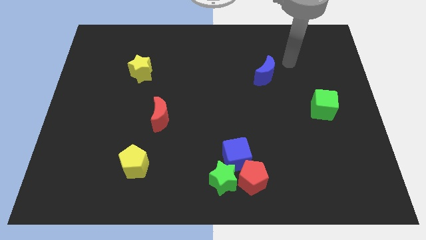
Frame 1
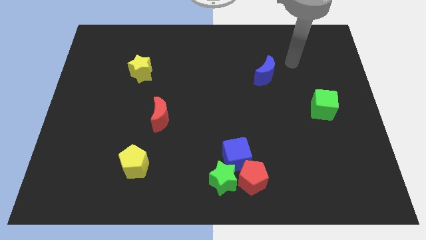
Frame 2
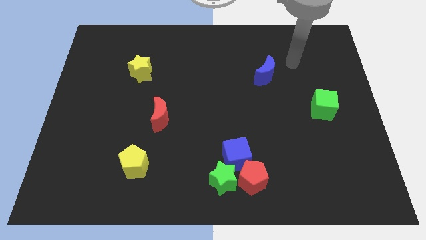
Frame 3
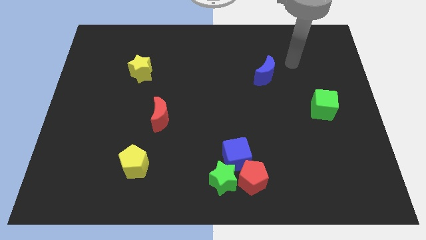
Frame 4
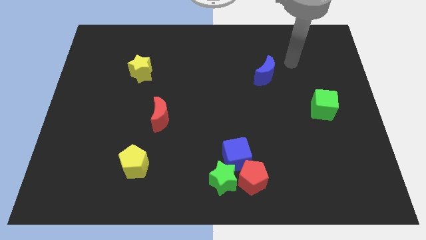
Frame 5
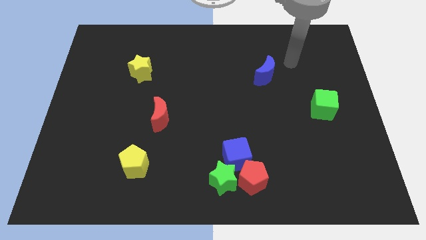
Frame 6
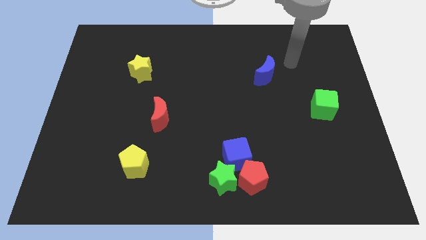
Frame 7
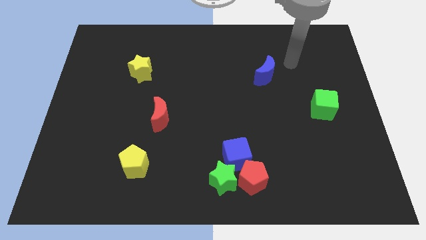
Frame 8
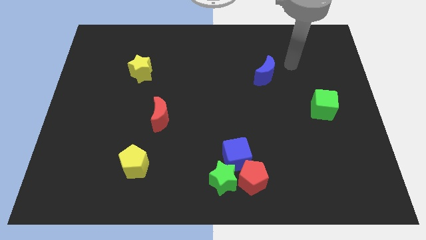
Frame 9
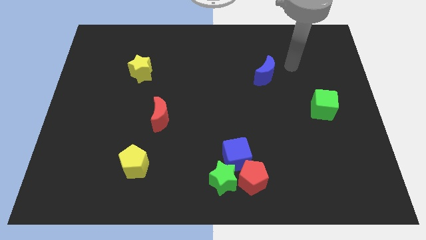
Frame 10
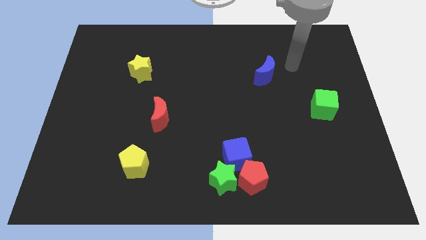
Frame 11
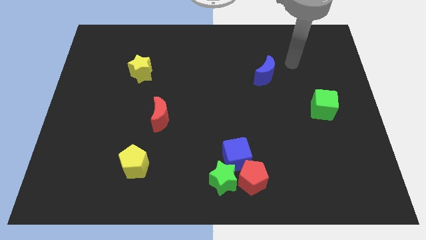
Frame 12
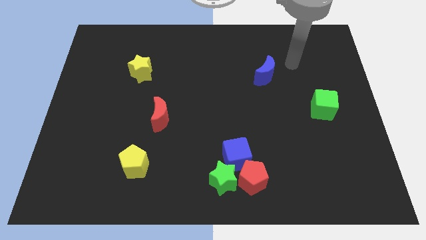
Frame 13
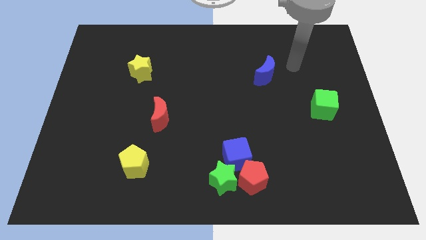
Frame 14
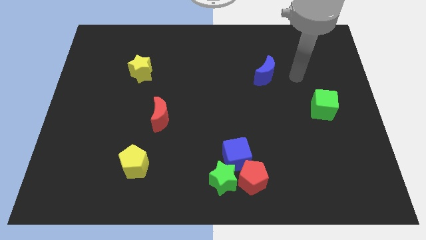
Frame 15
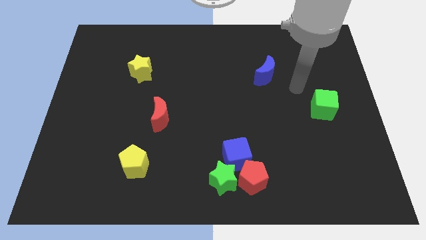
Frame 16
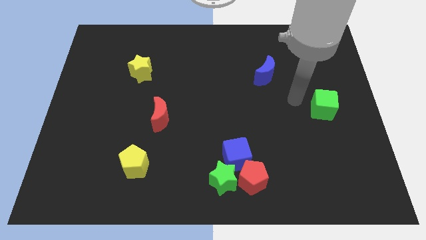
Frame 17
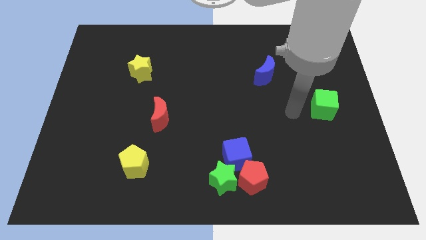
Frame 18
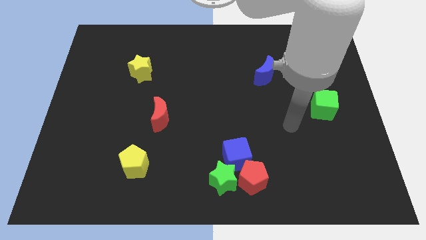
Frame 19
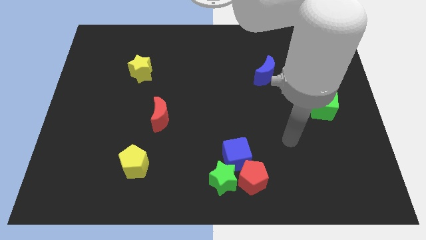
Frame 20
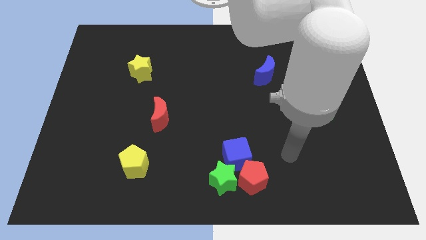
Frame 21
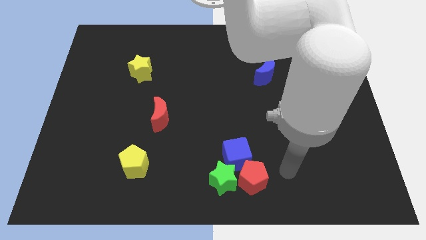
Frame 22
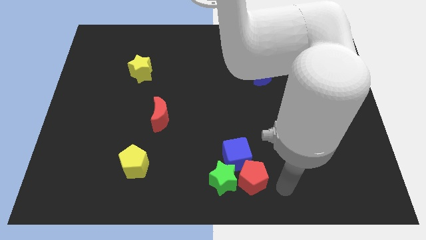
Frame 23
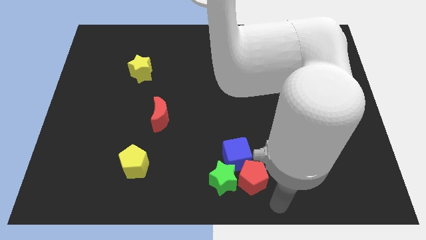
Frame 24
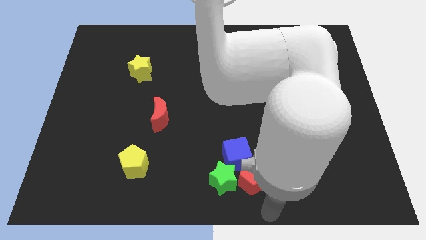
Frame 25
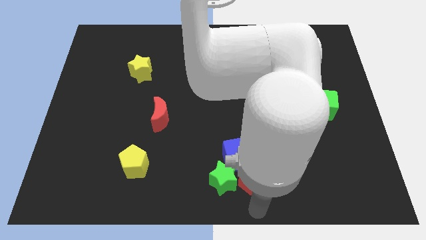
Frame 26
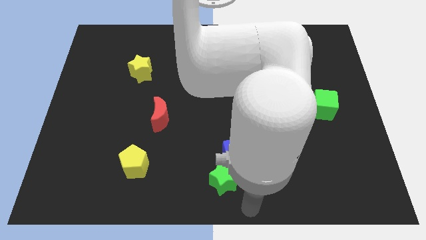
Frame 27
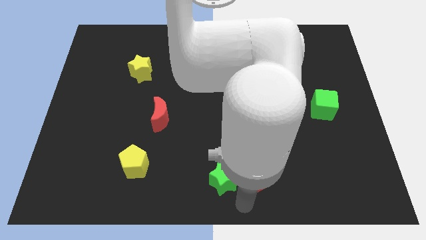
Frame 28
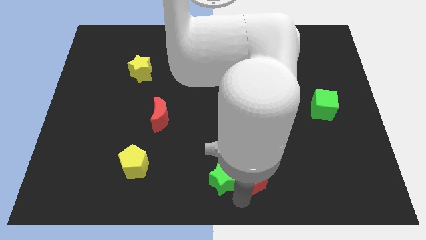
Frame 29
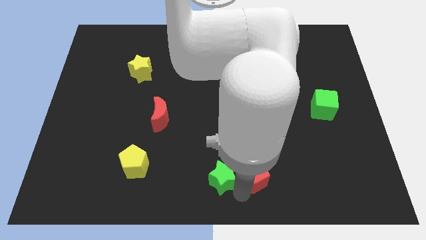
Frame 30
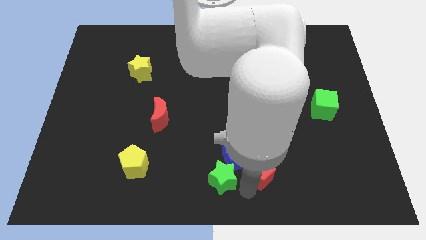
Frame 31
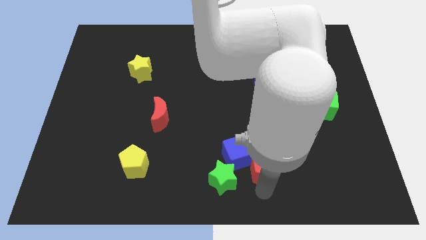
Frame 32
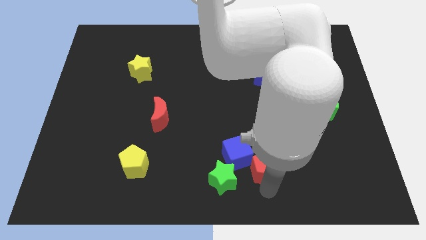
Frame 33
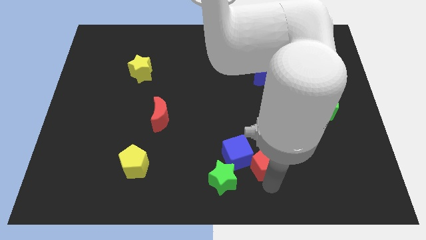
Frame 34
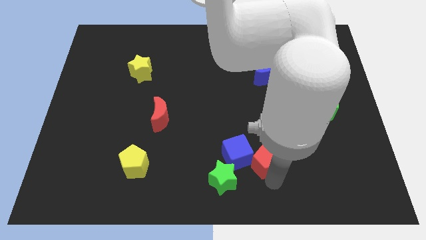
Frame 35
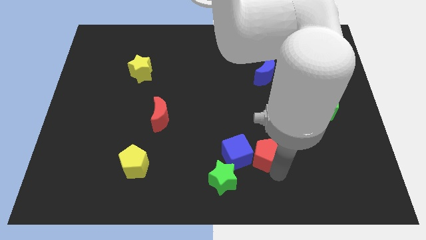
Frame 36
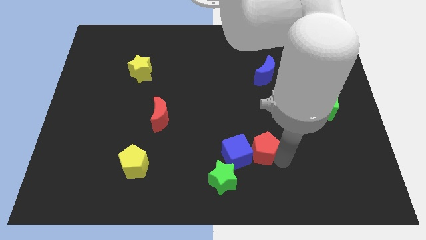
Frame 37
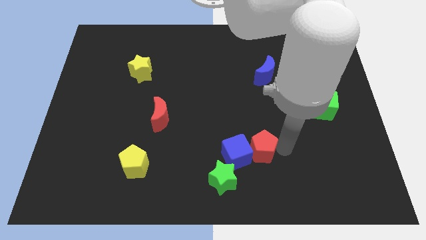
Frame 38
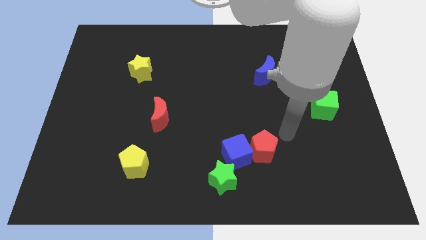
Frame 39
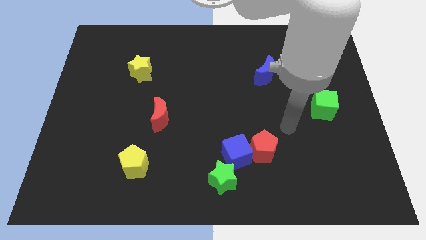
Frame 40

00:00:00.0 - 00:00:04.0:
move red pentagon right beside the blue cube

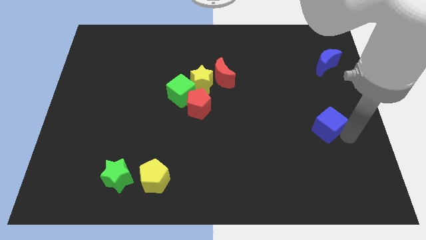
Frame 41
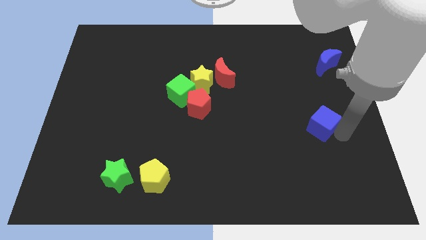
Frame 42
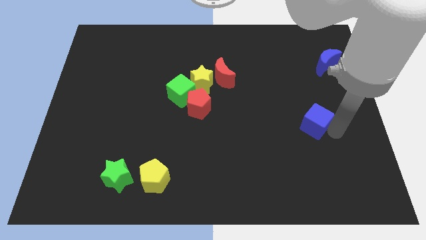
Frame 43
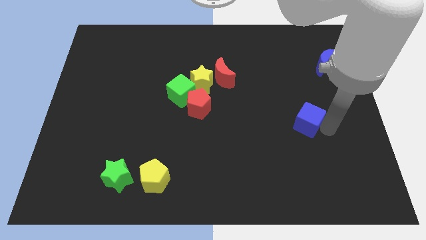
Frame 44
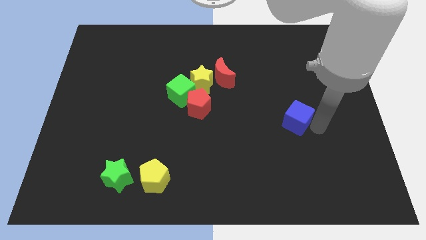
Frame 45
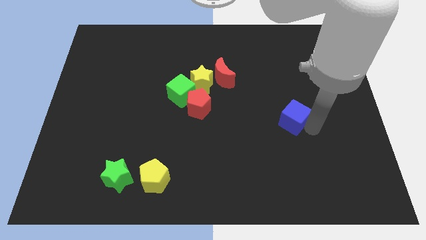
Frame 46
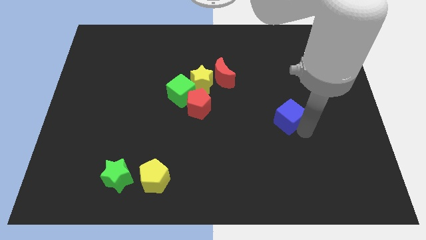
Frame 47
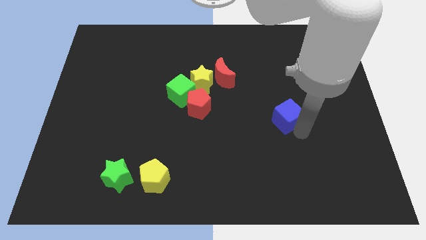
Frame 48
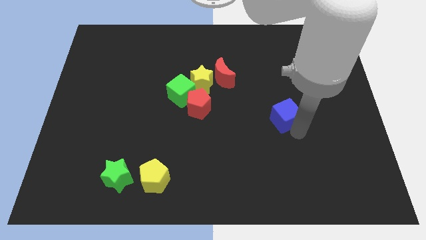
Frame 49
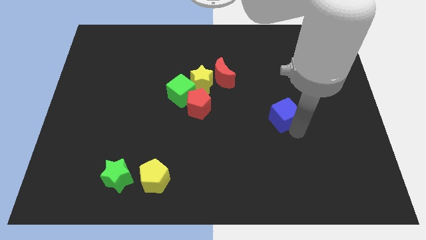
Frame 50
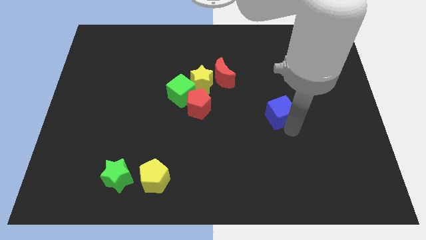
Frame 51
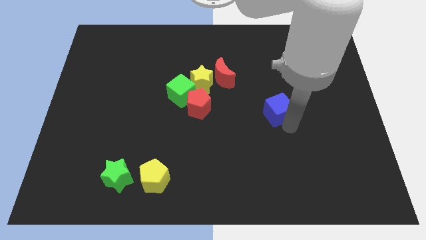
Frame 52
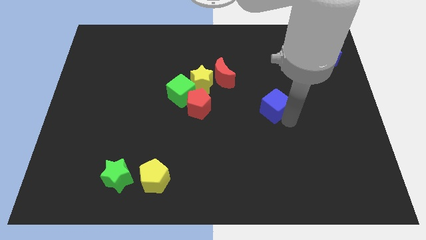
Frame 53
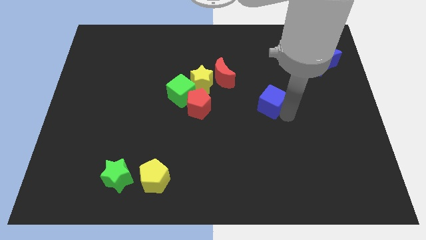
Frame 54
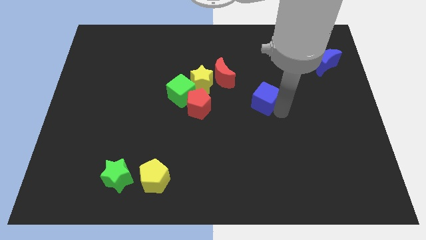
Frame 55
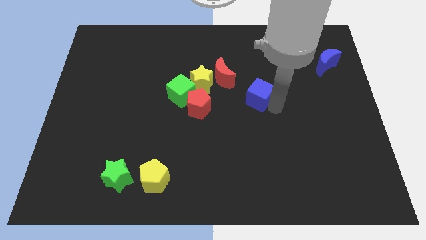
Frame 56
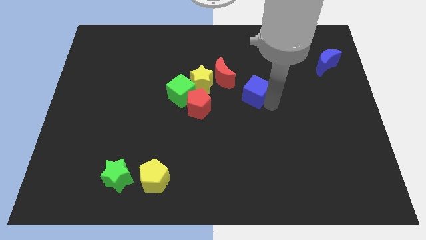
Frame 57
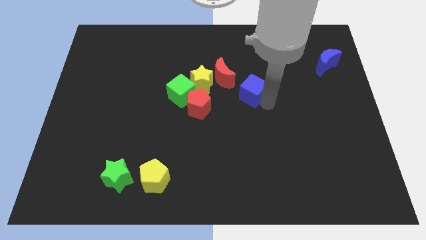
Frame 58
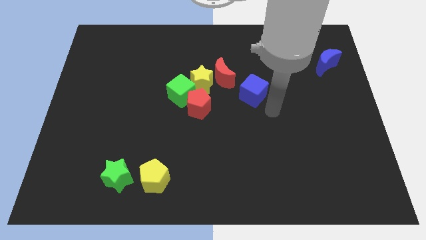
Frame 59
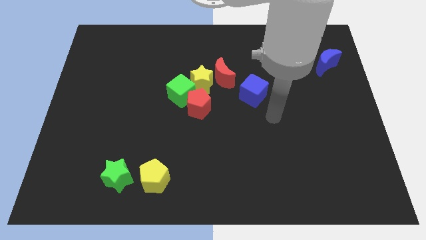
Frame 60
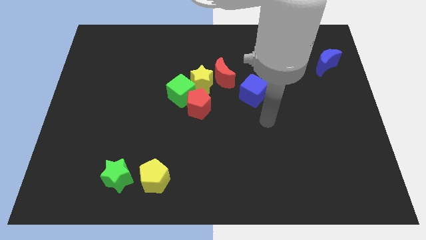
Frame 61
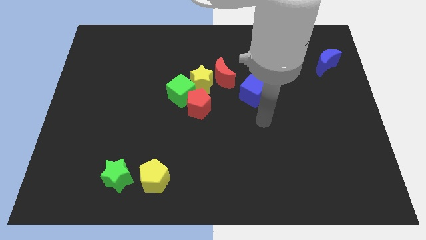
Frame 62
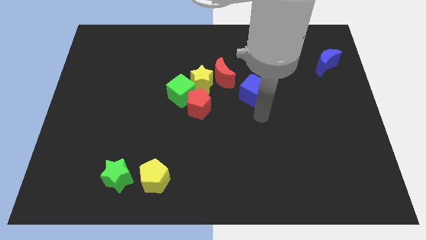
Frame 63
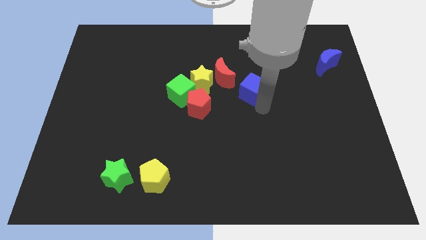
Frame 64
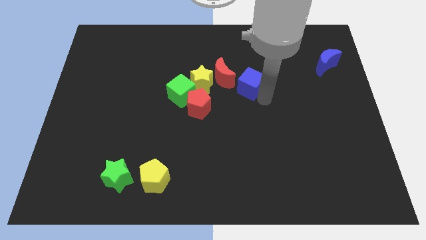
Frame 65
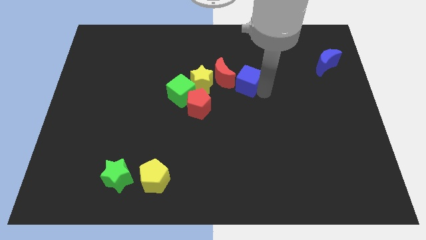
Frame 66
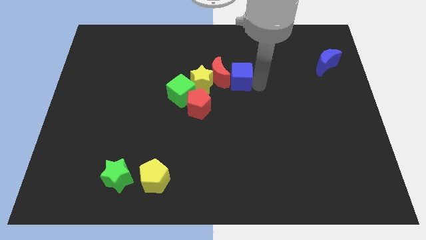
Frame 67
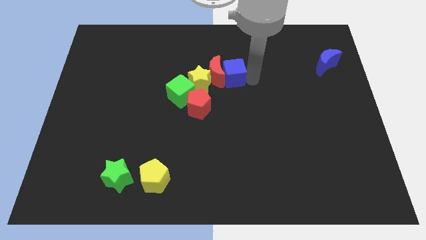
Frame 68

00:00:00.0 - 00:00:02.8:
move blue cube into right of red moon

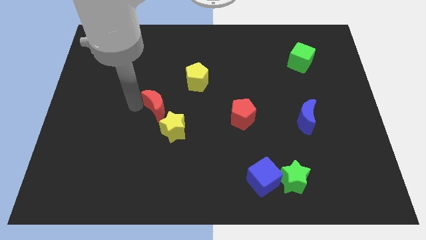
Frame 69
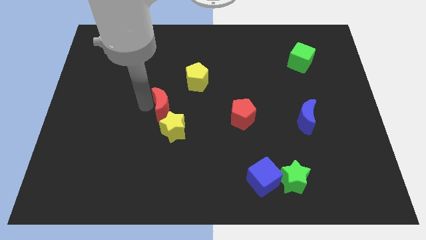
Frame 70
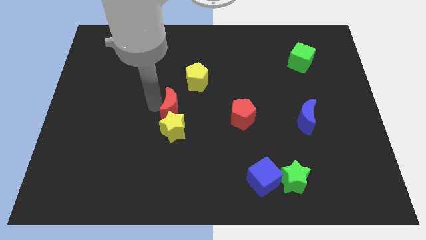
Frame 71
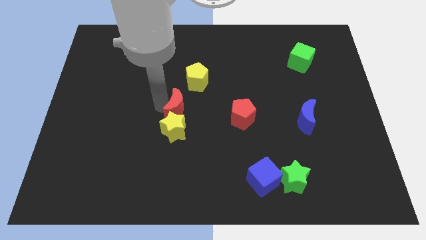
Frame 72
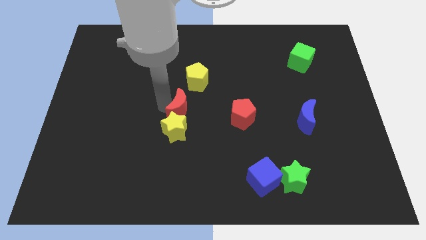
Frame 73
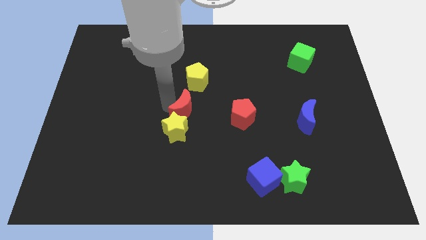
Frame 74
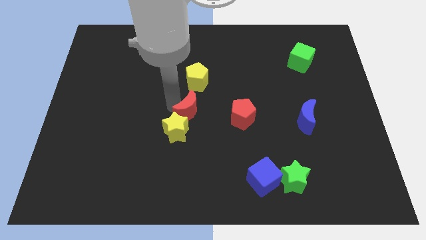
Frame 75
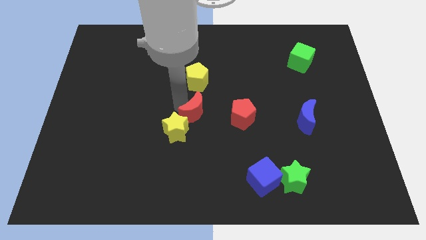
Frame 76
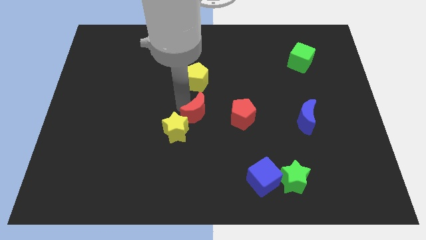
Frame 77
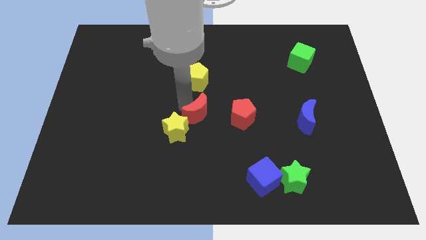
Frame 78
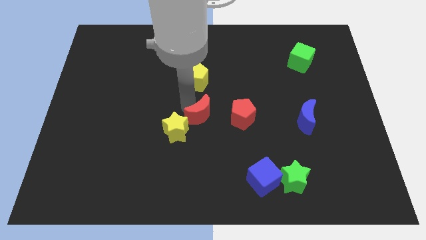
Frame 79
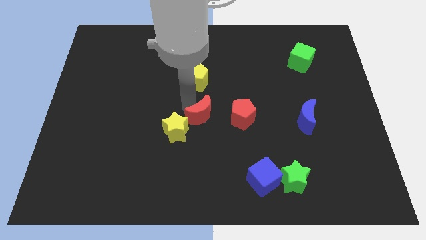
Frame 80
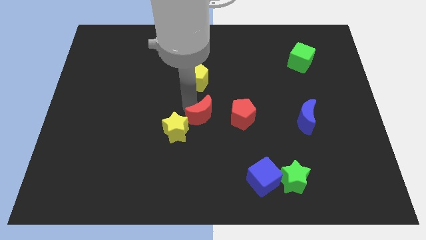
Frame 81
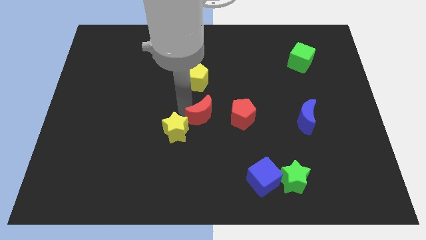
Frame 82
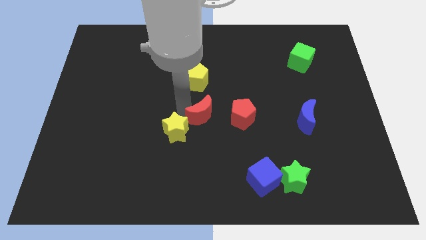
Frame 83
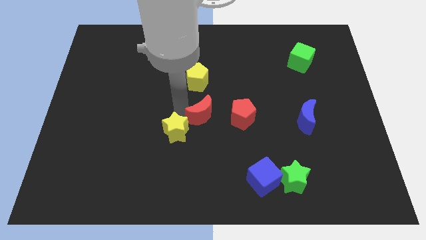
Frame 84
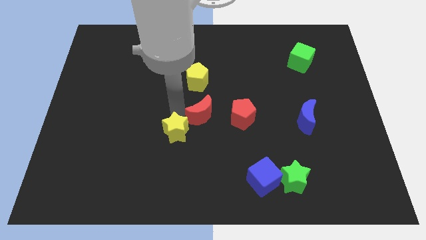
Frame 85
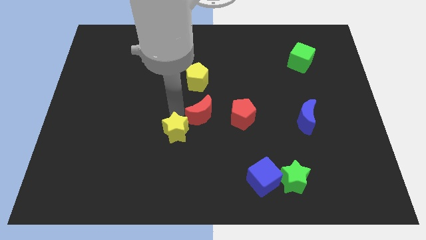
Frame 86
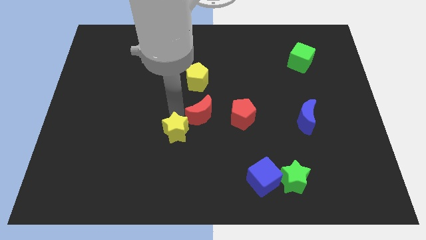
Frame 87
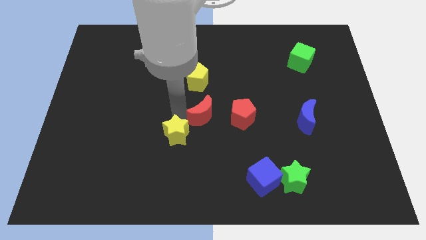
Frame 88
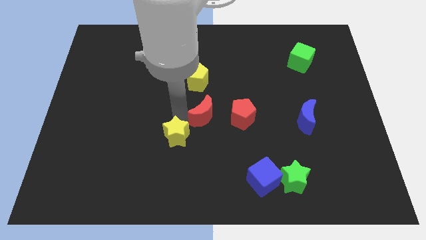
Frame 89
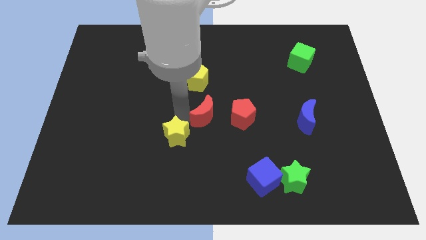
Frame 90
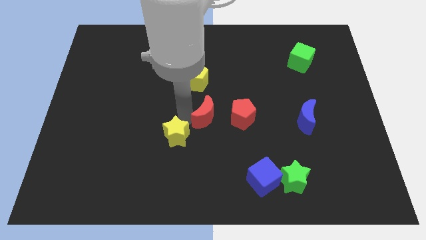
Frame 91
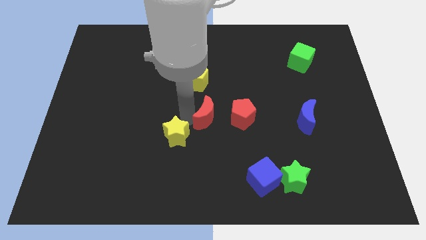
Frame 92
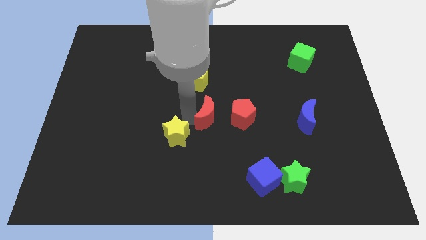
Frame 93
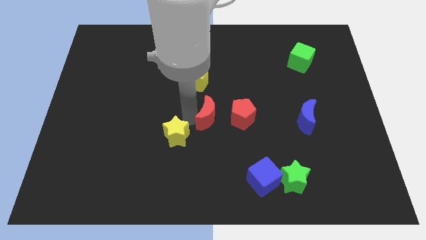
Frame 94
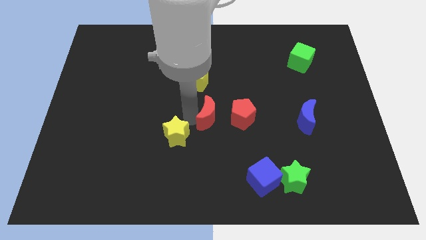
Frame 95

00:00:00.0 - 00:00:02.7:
place the red crescent parallel to the left of the red pentagon
